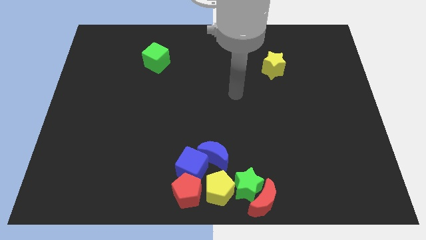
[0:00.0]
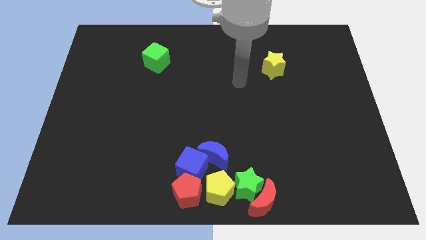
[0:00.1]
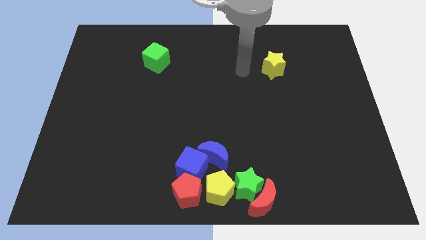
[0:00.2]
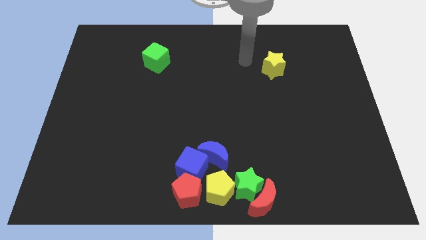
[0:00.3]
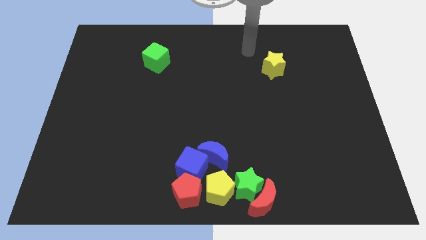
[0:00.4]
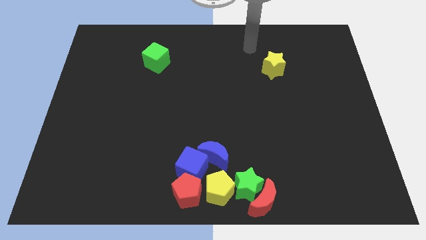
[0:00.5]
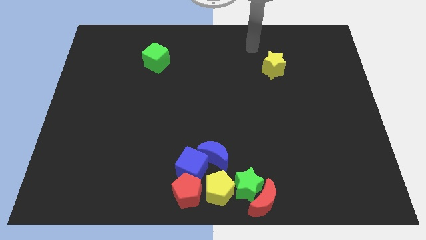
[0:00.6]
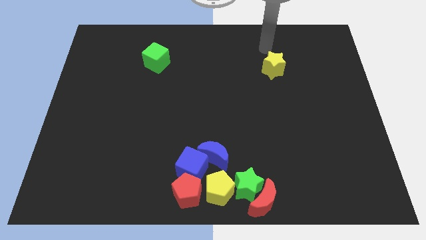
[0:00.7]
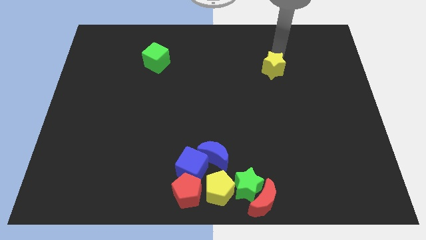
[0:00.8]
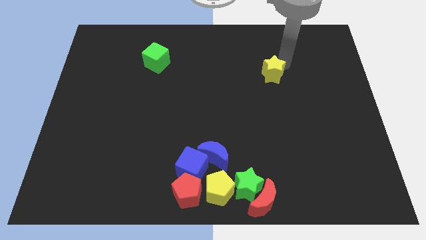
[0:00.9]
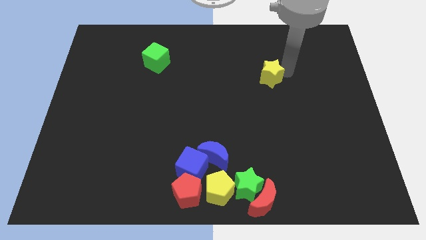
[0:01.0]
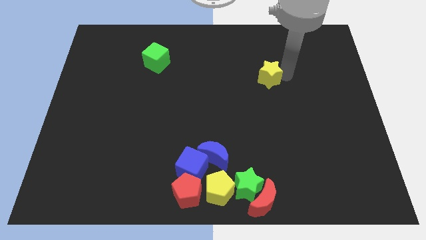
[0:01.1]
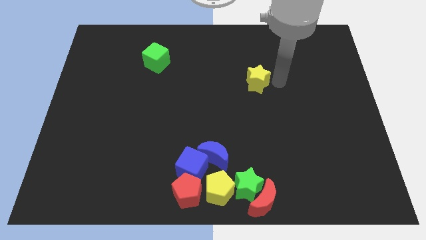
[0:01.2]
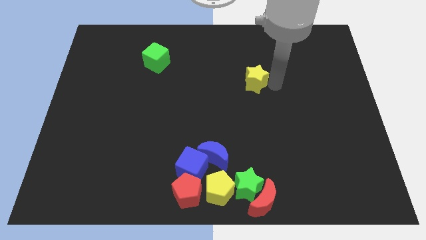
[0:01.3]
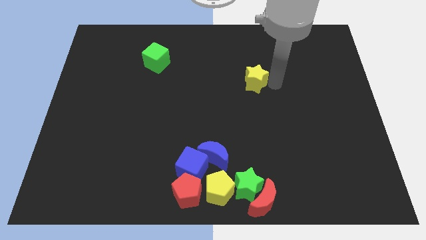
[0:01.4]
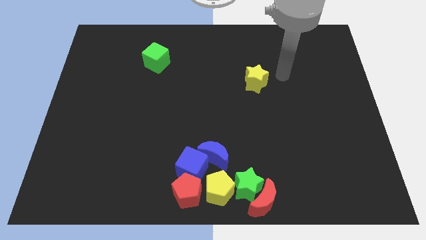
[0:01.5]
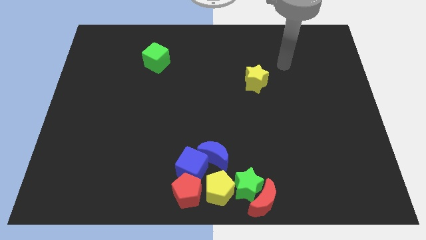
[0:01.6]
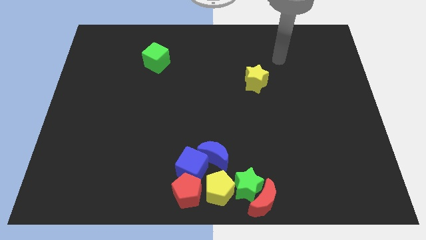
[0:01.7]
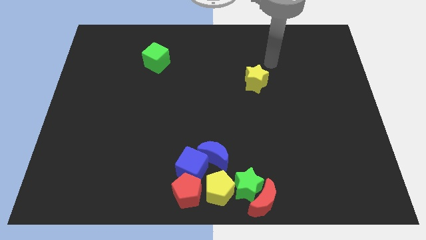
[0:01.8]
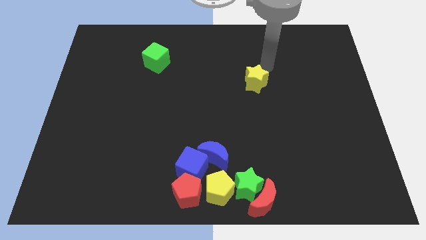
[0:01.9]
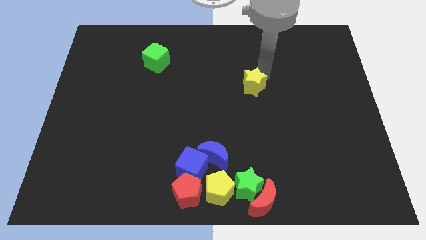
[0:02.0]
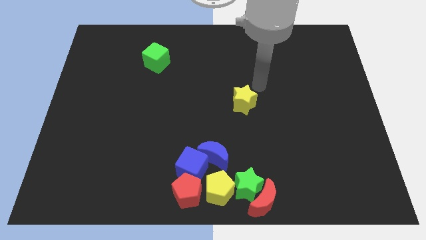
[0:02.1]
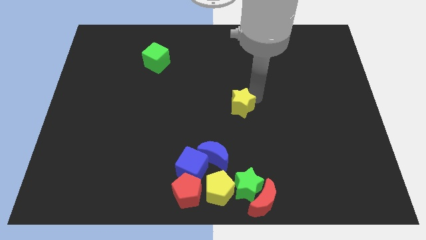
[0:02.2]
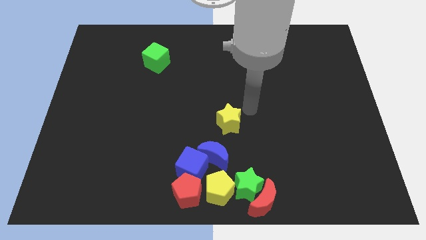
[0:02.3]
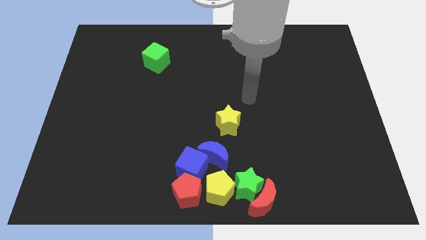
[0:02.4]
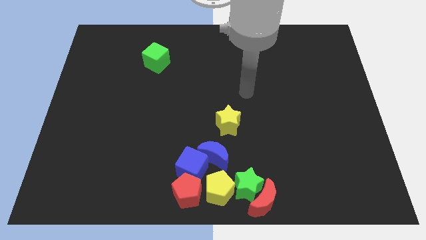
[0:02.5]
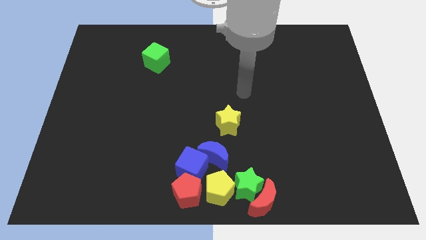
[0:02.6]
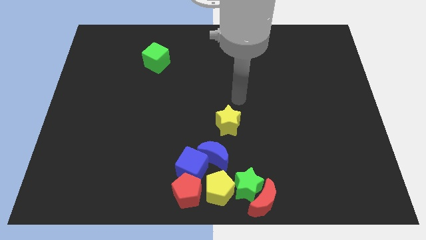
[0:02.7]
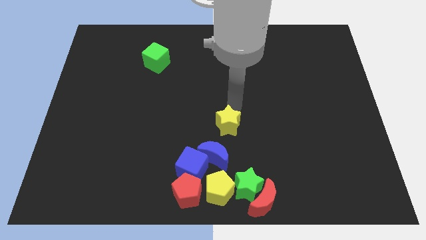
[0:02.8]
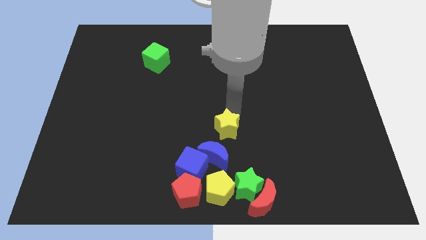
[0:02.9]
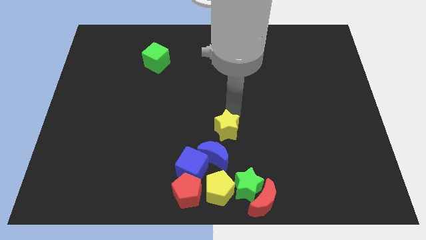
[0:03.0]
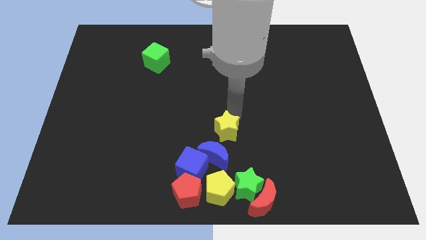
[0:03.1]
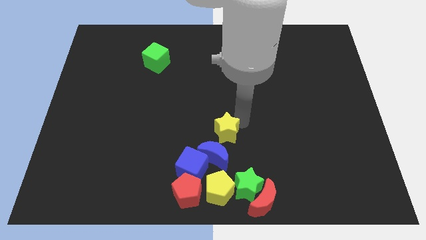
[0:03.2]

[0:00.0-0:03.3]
move the yellow star towards the blue moon

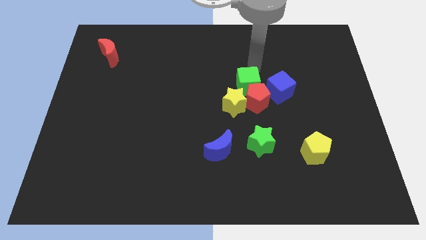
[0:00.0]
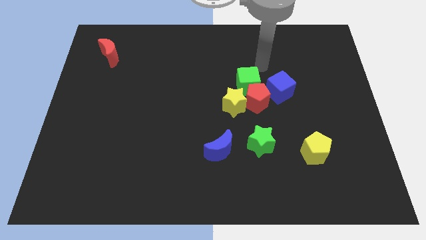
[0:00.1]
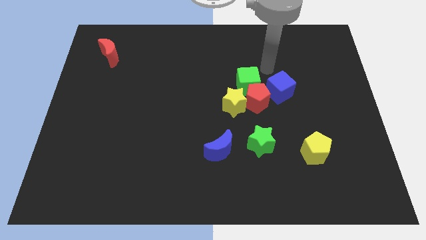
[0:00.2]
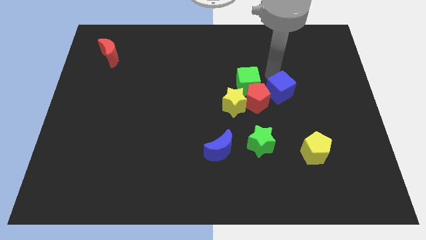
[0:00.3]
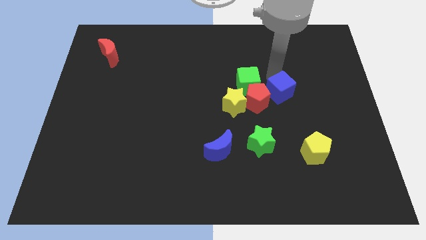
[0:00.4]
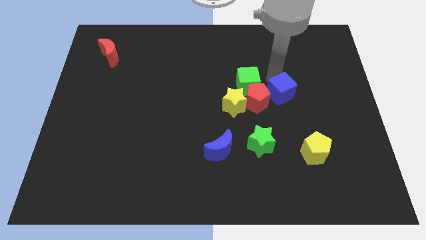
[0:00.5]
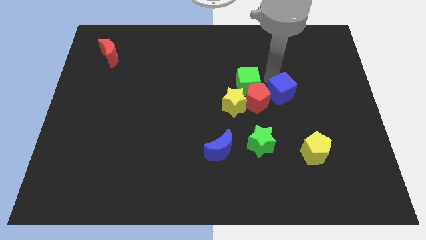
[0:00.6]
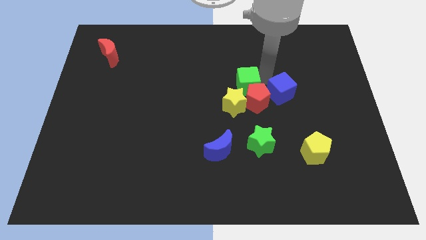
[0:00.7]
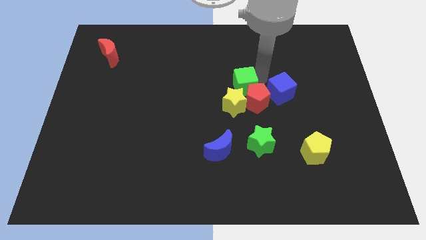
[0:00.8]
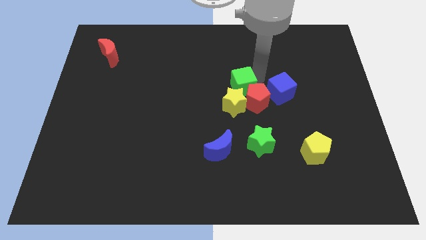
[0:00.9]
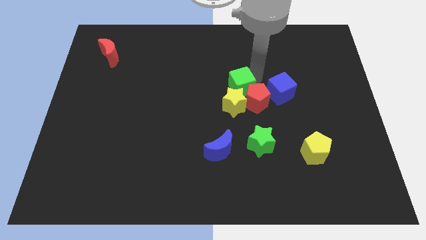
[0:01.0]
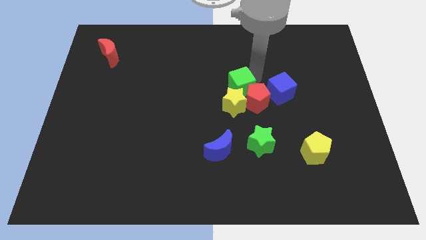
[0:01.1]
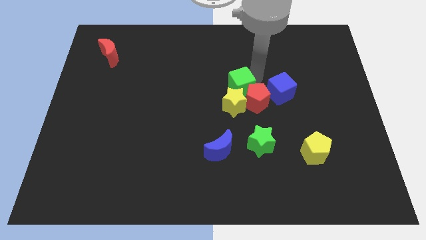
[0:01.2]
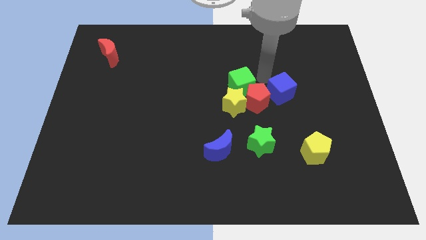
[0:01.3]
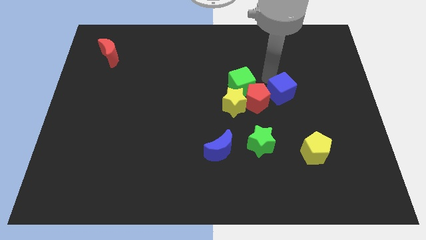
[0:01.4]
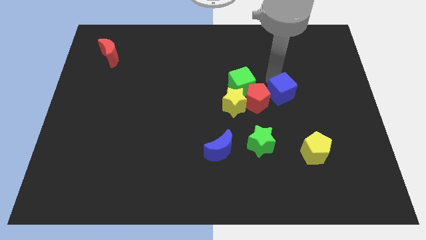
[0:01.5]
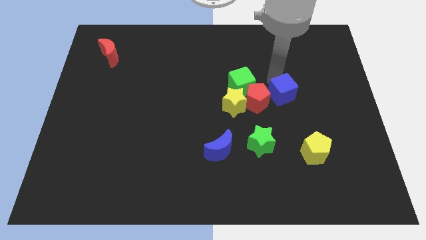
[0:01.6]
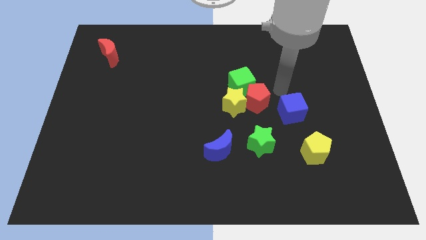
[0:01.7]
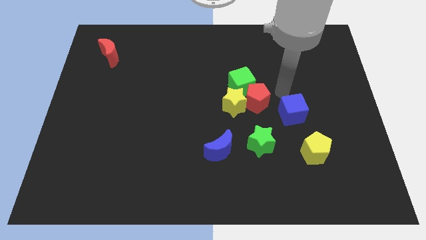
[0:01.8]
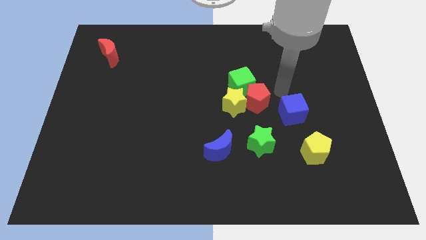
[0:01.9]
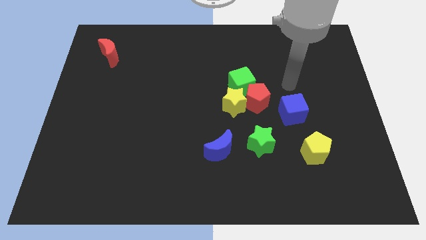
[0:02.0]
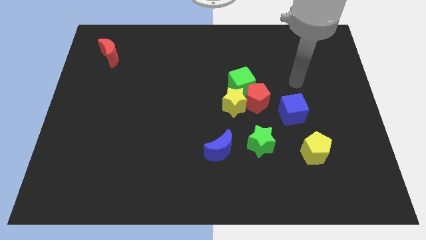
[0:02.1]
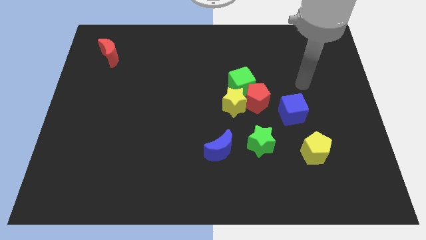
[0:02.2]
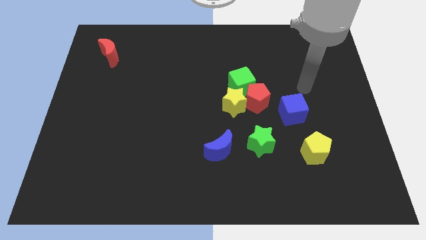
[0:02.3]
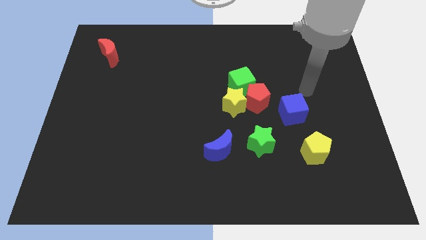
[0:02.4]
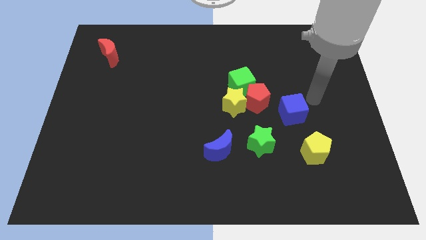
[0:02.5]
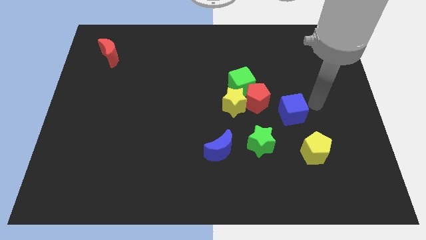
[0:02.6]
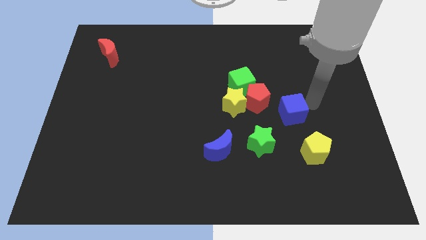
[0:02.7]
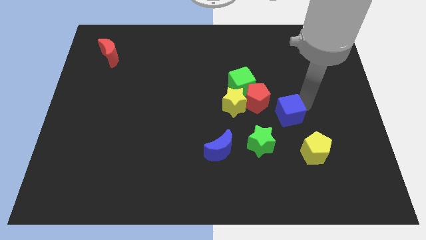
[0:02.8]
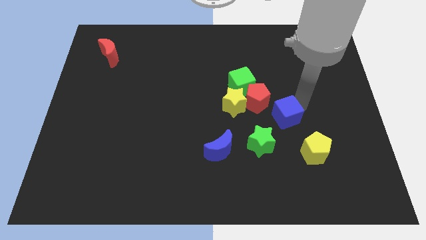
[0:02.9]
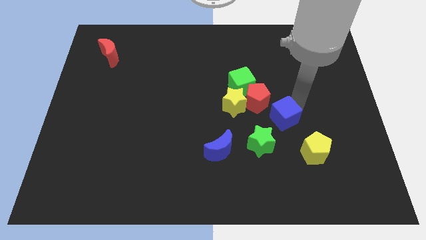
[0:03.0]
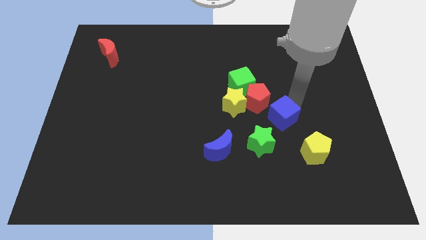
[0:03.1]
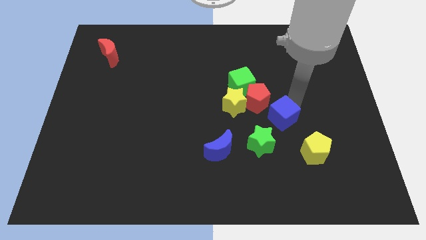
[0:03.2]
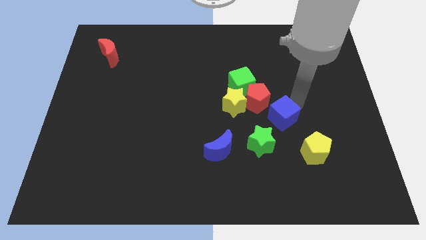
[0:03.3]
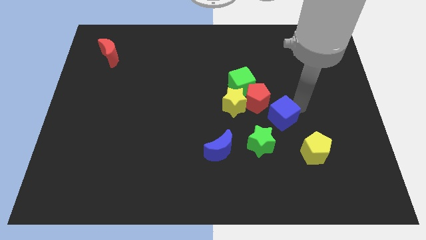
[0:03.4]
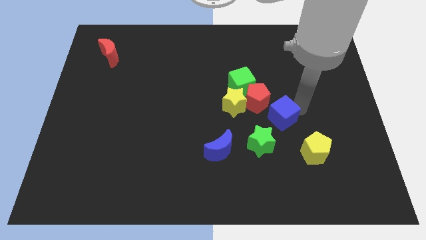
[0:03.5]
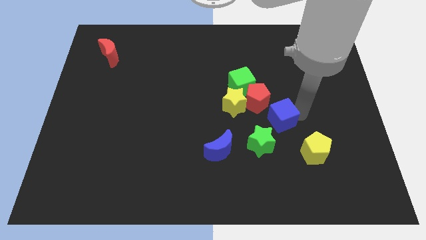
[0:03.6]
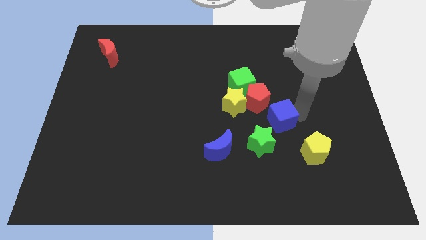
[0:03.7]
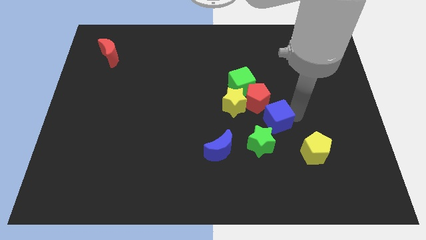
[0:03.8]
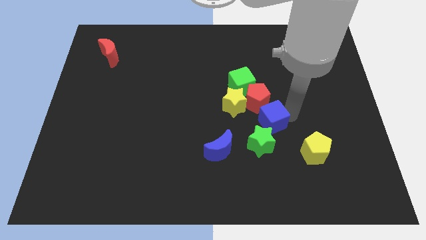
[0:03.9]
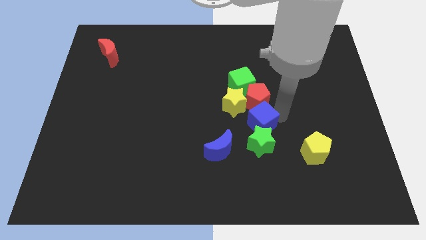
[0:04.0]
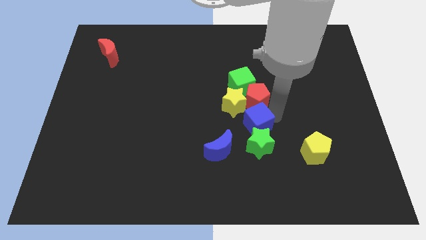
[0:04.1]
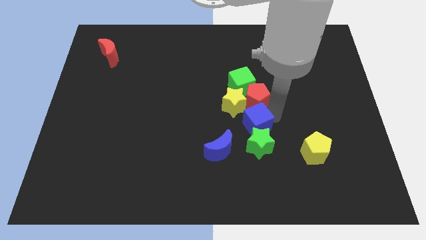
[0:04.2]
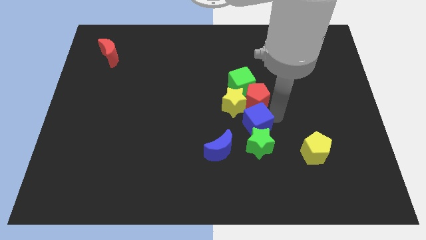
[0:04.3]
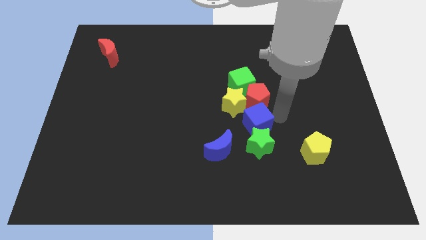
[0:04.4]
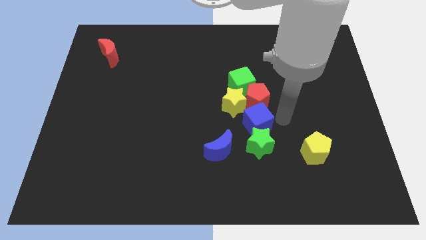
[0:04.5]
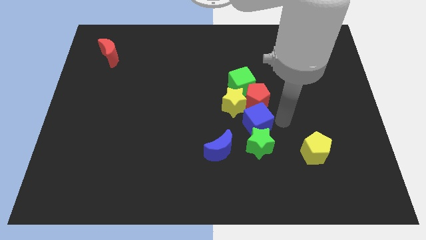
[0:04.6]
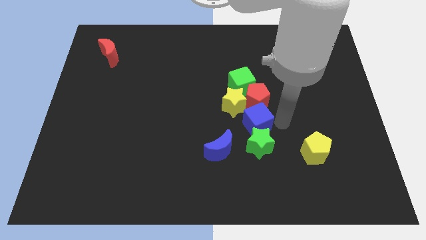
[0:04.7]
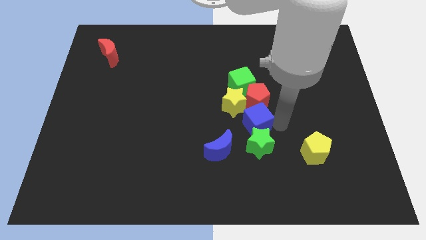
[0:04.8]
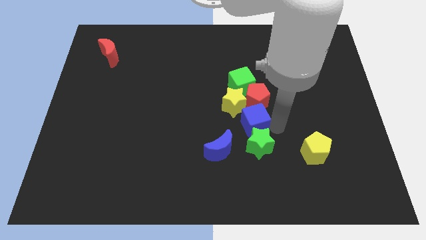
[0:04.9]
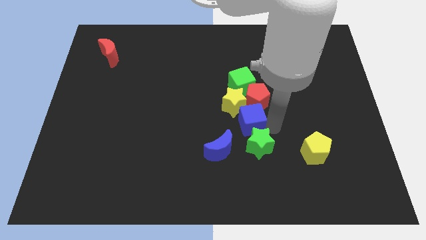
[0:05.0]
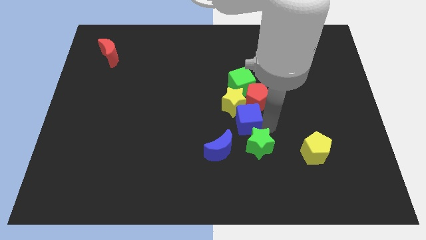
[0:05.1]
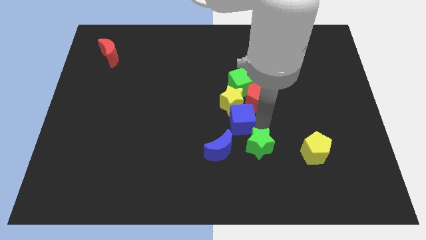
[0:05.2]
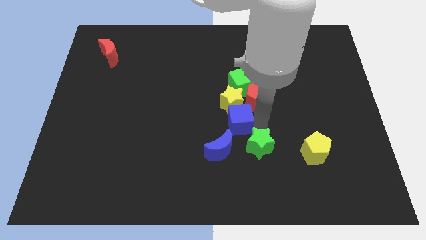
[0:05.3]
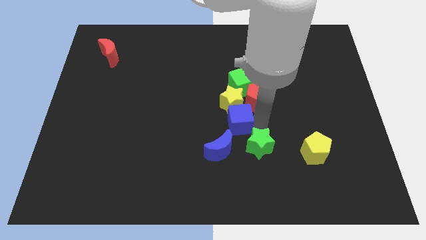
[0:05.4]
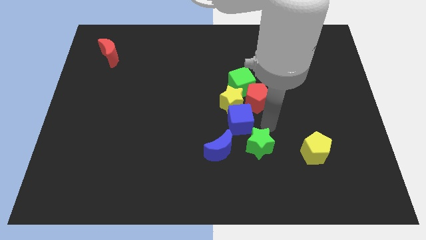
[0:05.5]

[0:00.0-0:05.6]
place the blue cube in between the yellow star and green star

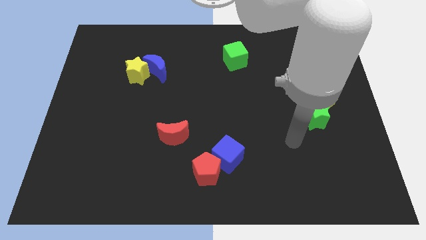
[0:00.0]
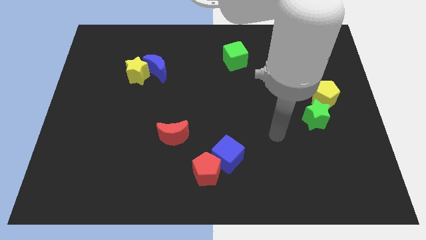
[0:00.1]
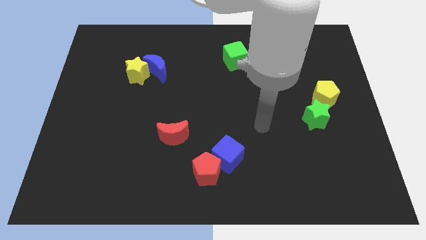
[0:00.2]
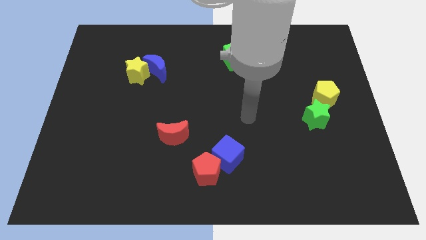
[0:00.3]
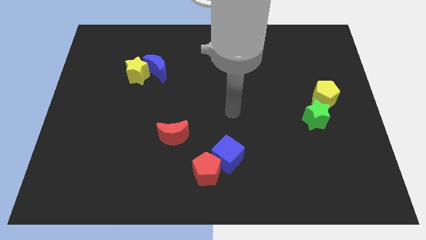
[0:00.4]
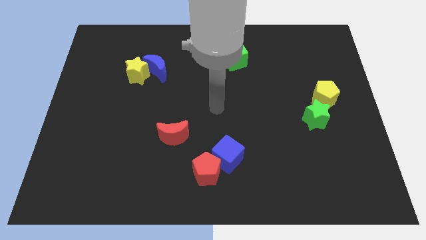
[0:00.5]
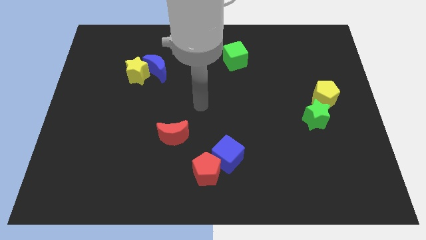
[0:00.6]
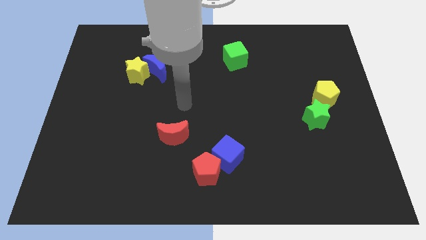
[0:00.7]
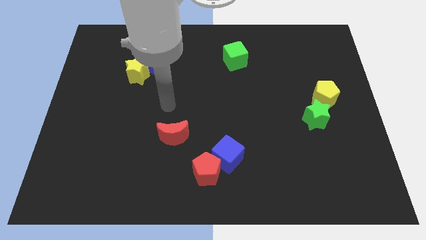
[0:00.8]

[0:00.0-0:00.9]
move arm towards the top of red crescent
